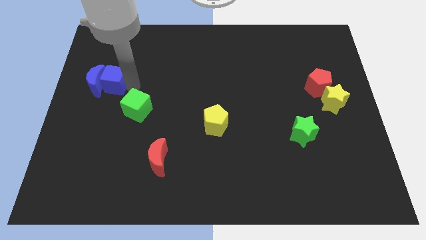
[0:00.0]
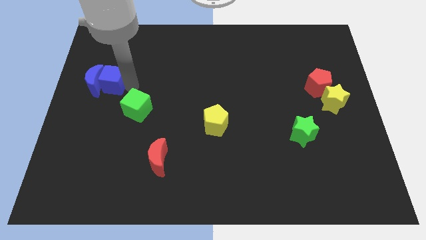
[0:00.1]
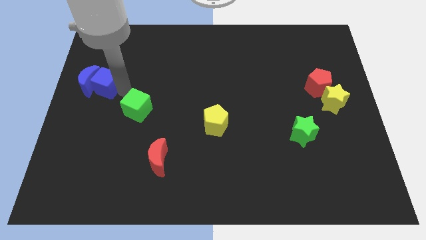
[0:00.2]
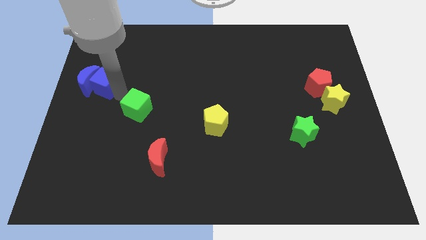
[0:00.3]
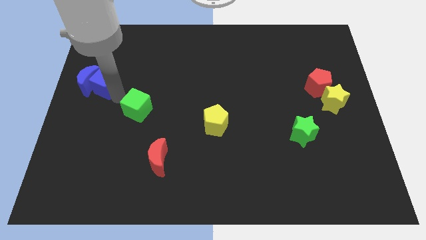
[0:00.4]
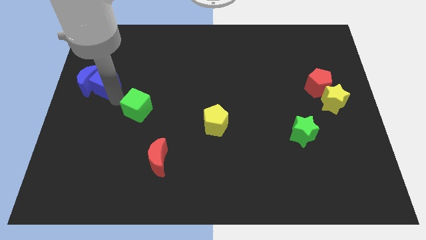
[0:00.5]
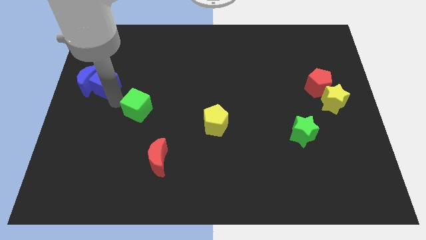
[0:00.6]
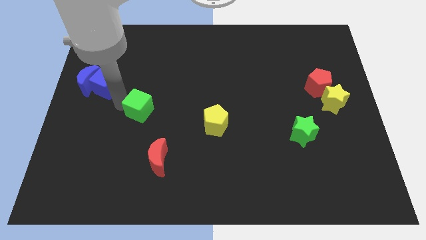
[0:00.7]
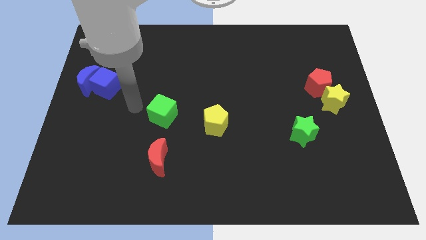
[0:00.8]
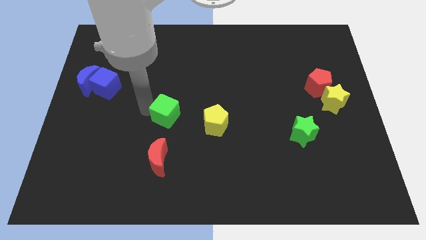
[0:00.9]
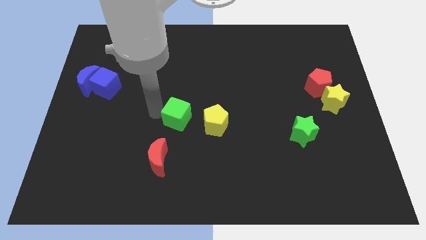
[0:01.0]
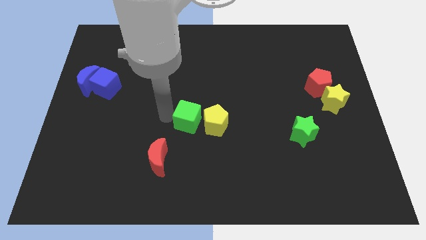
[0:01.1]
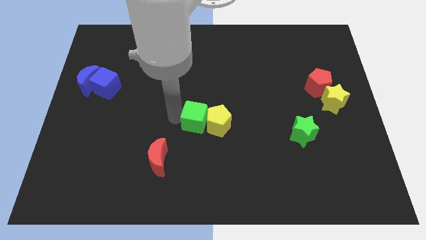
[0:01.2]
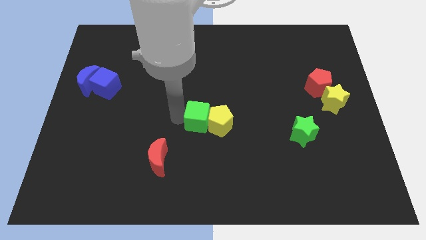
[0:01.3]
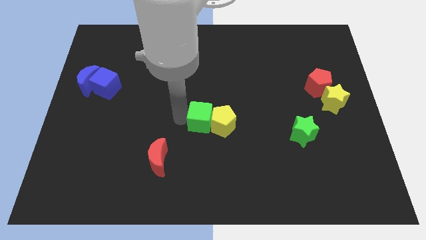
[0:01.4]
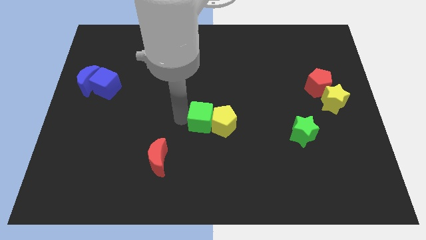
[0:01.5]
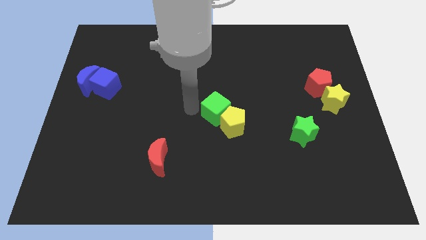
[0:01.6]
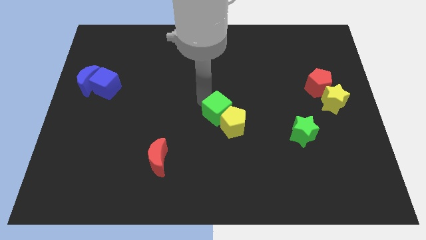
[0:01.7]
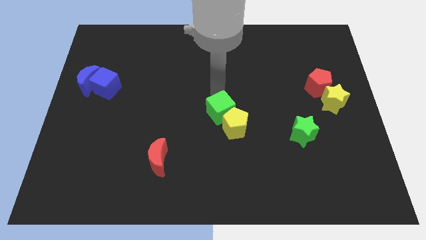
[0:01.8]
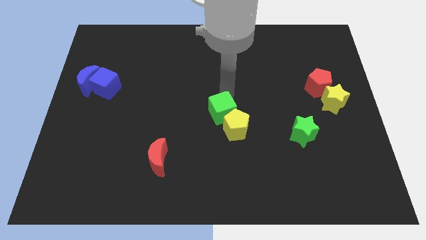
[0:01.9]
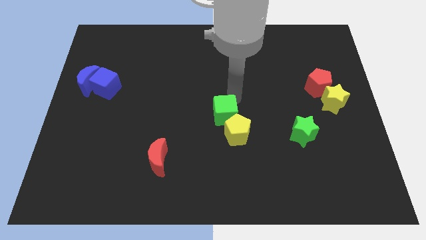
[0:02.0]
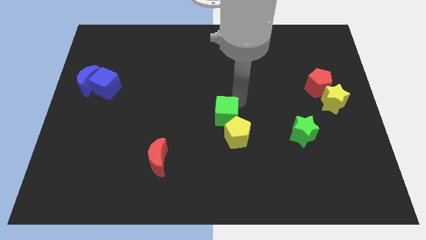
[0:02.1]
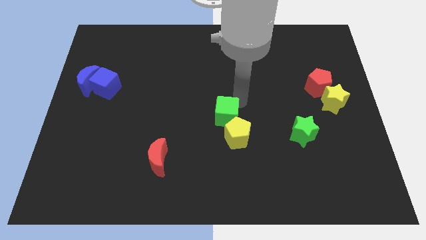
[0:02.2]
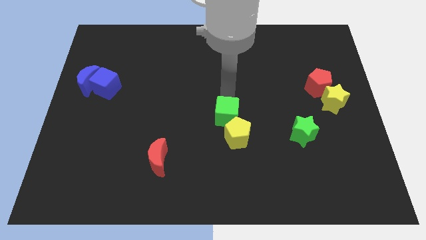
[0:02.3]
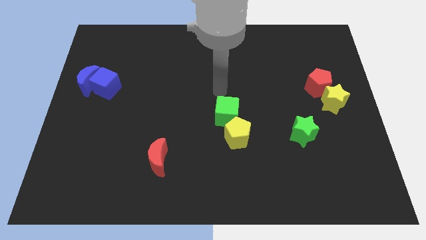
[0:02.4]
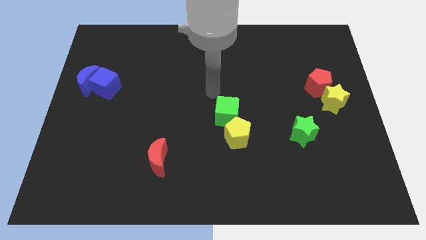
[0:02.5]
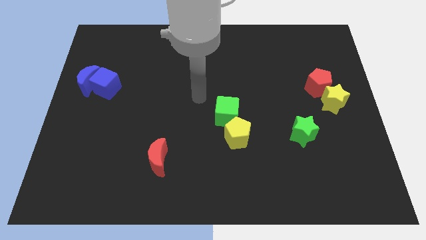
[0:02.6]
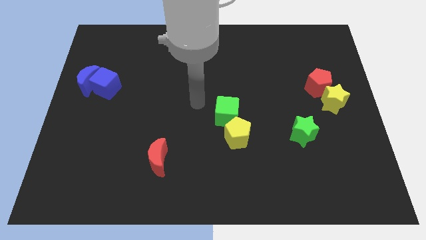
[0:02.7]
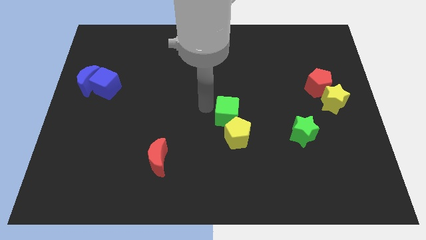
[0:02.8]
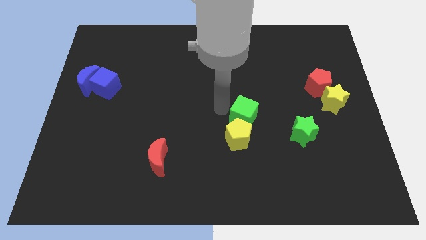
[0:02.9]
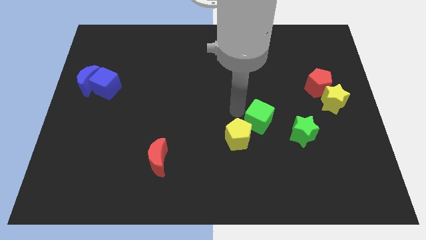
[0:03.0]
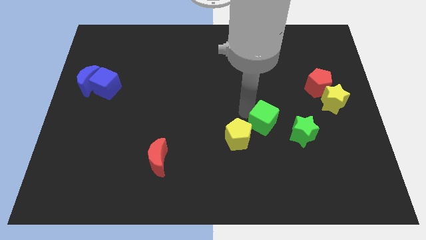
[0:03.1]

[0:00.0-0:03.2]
push the green cube towards the green star

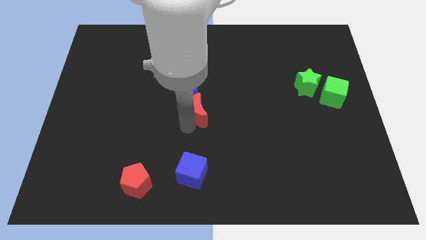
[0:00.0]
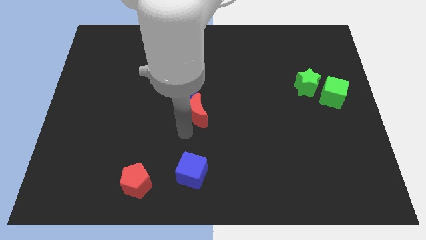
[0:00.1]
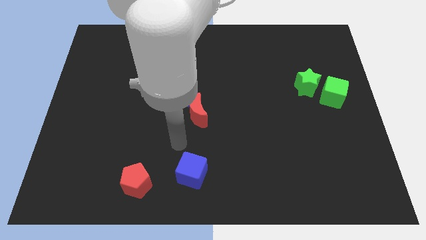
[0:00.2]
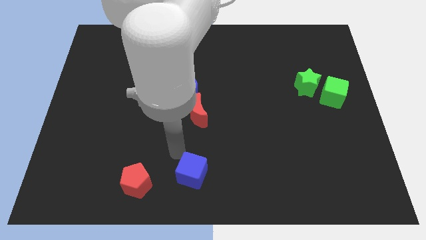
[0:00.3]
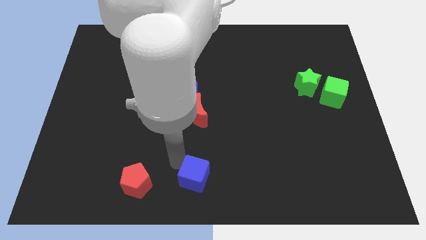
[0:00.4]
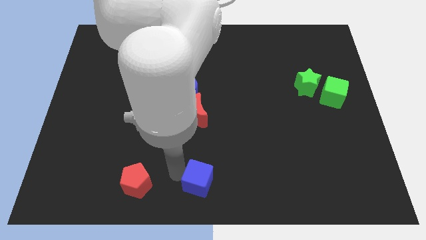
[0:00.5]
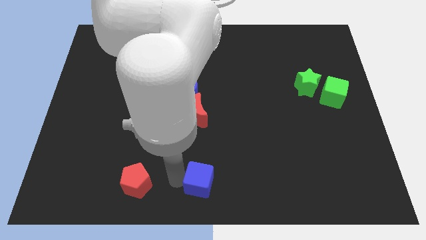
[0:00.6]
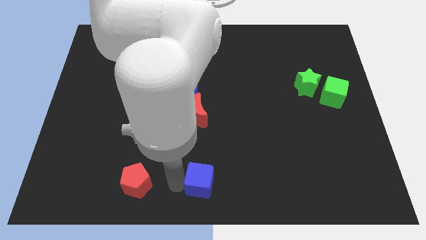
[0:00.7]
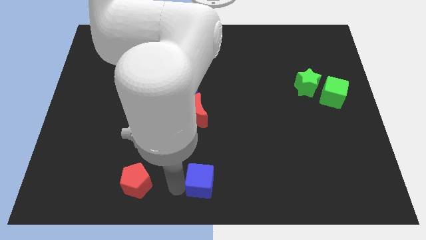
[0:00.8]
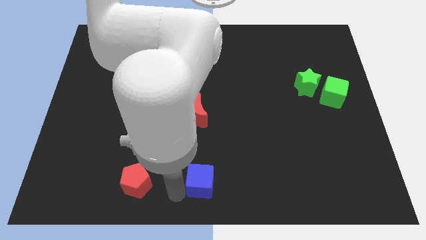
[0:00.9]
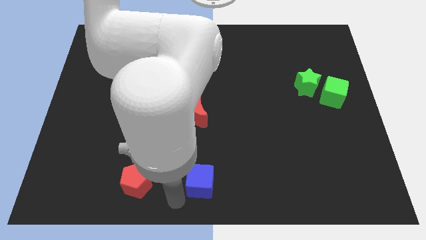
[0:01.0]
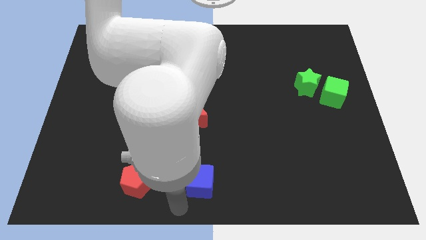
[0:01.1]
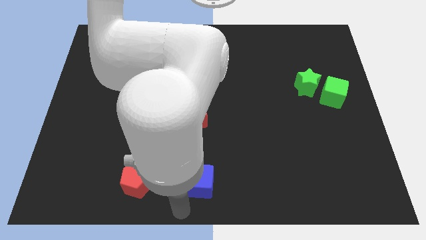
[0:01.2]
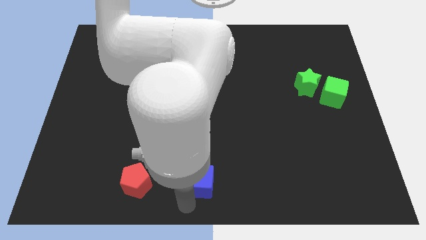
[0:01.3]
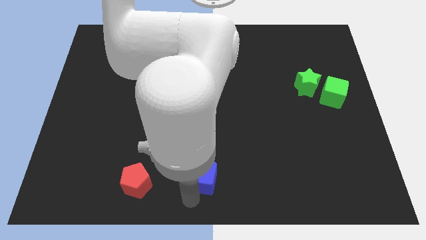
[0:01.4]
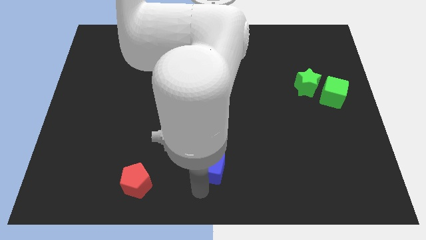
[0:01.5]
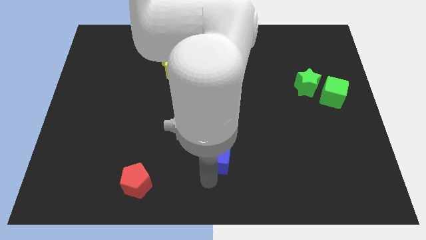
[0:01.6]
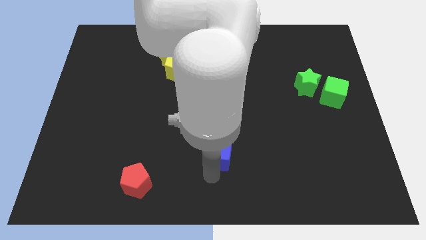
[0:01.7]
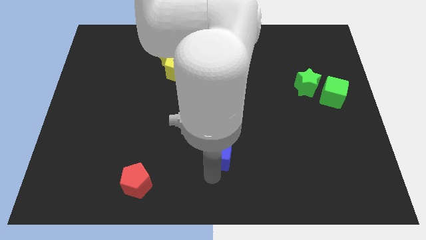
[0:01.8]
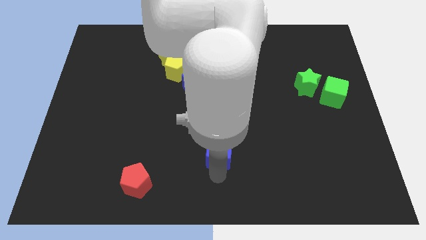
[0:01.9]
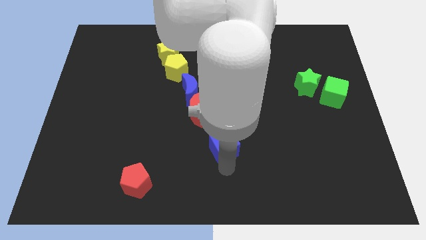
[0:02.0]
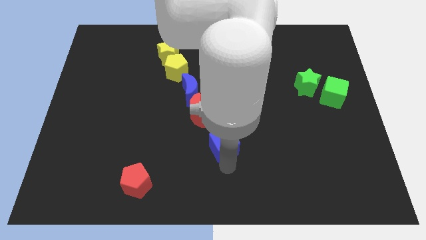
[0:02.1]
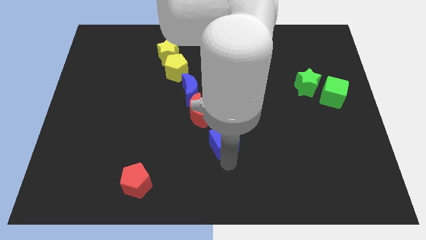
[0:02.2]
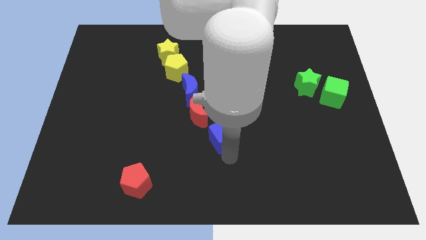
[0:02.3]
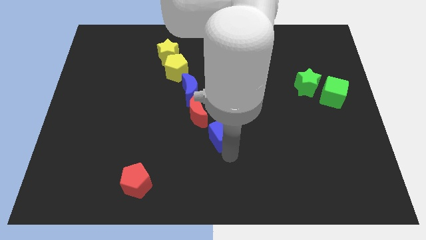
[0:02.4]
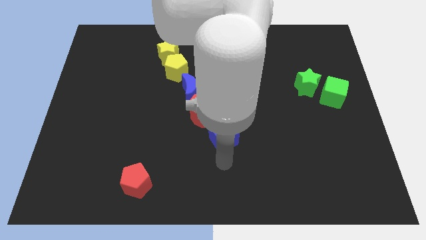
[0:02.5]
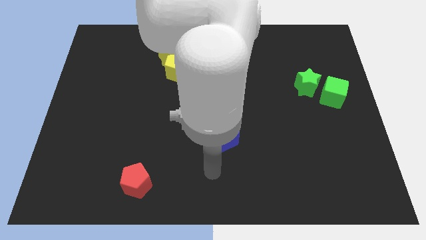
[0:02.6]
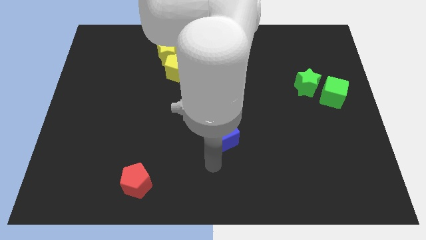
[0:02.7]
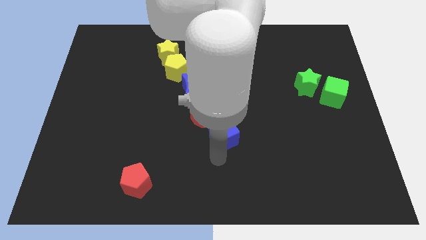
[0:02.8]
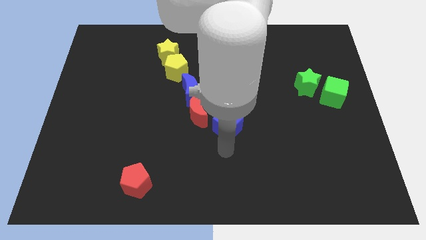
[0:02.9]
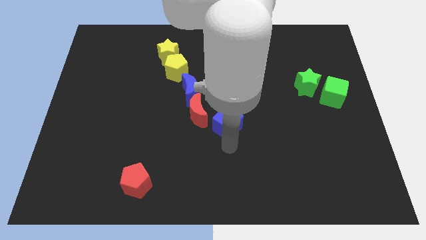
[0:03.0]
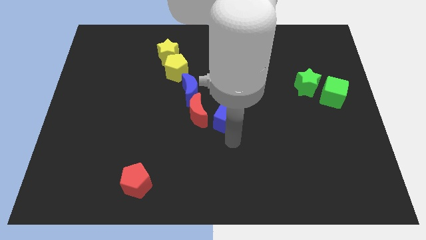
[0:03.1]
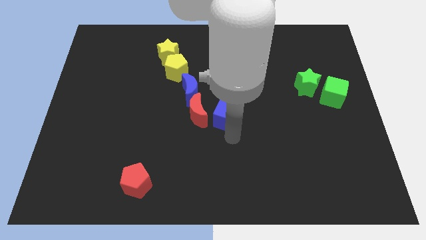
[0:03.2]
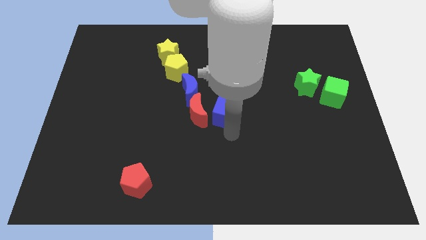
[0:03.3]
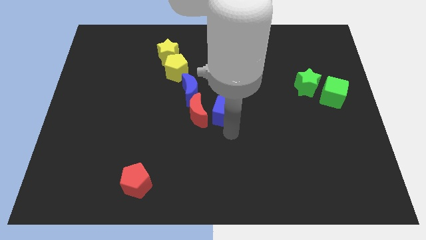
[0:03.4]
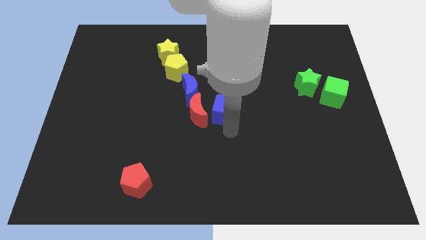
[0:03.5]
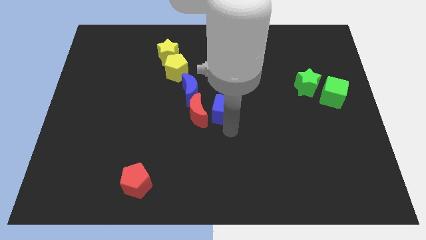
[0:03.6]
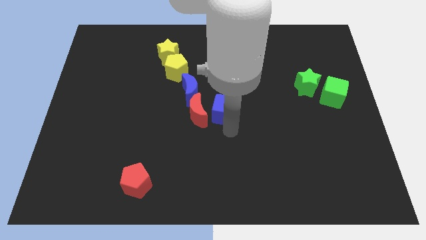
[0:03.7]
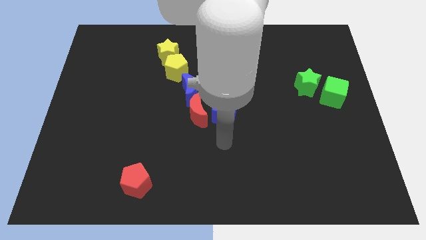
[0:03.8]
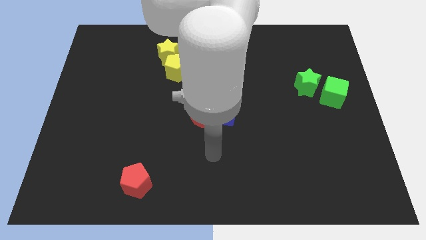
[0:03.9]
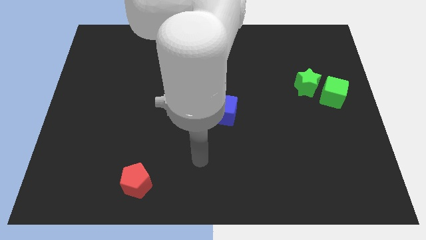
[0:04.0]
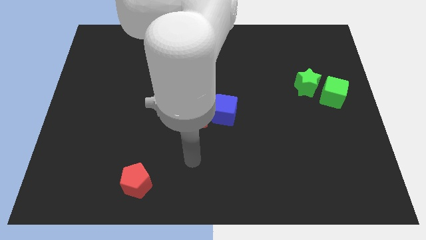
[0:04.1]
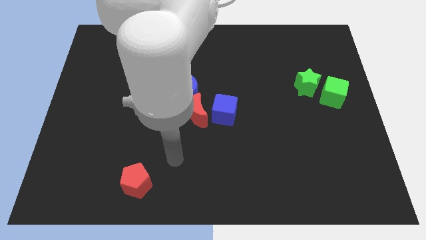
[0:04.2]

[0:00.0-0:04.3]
move the blue cube to the right of the red crescent

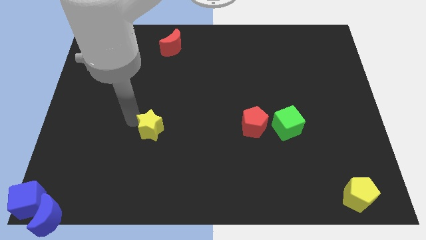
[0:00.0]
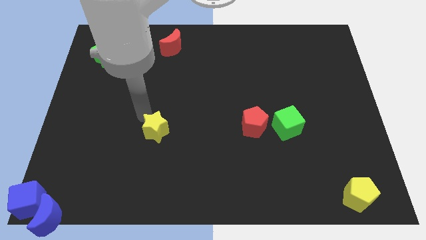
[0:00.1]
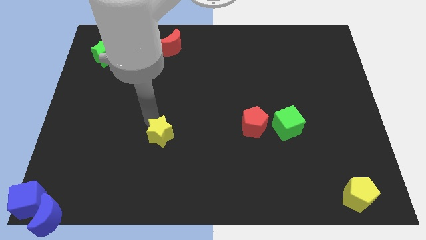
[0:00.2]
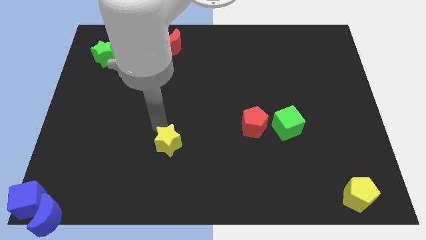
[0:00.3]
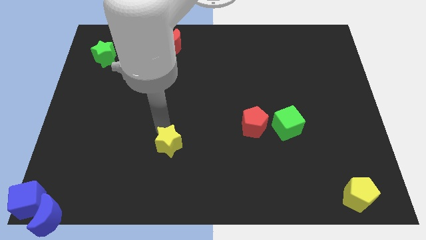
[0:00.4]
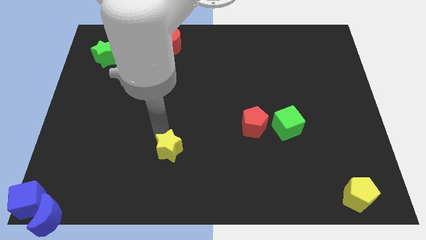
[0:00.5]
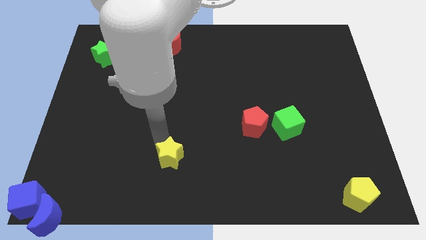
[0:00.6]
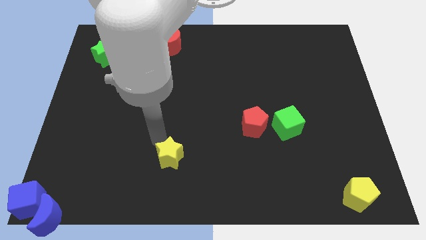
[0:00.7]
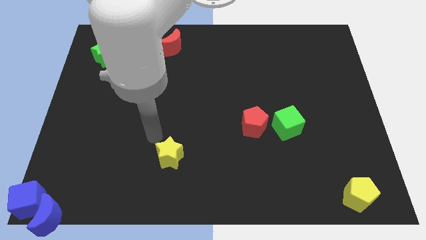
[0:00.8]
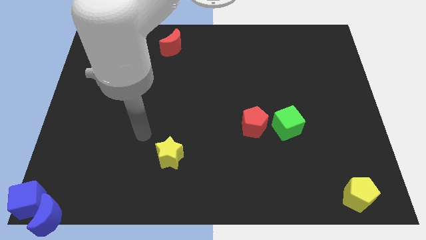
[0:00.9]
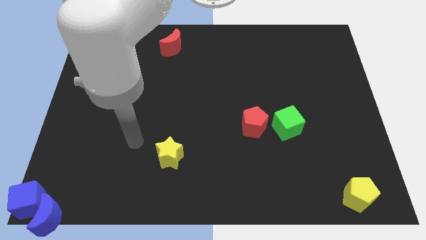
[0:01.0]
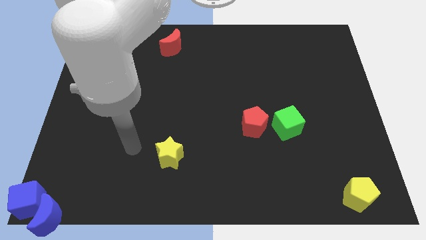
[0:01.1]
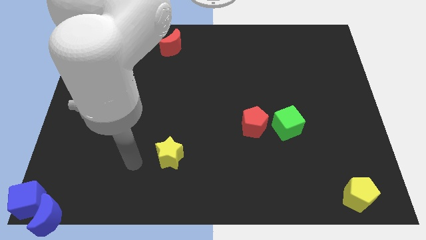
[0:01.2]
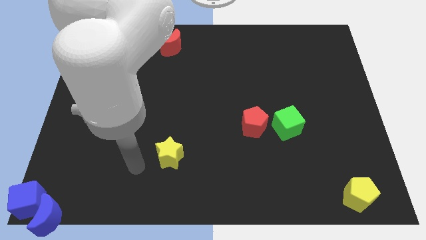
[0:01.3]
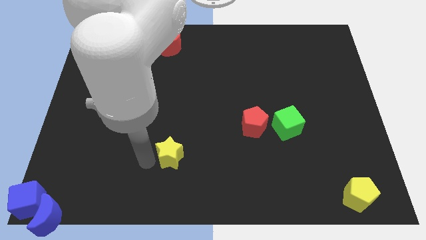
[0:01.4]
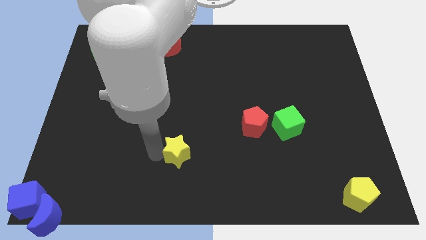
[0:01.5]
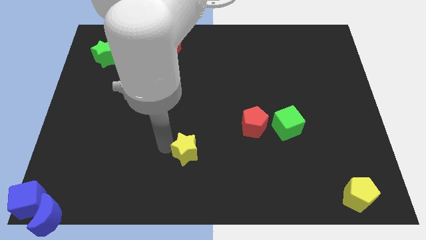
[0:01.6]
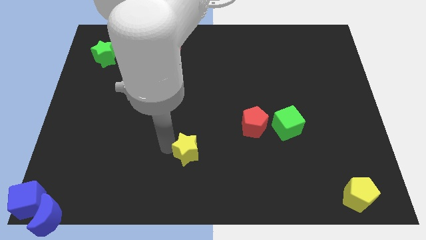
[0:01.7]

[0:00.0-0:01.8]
drag the yellow star to the bottom left of the red pentagon
